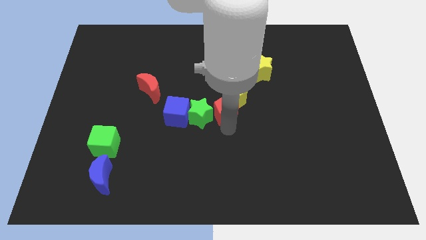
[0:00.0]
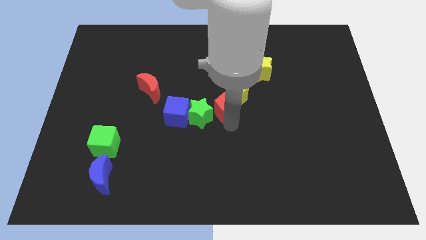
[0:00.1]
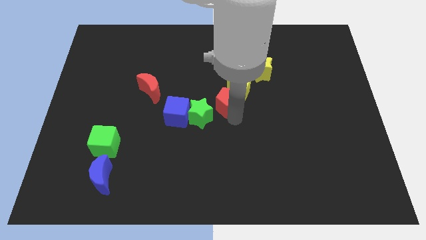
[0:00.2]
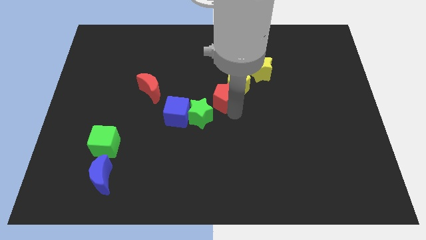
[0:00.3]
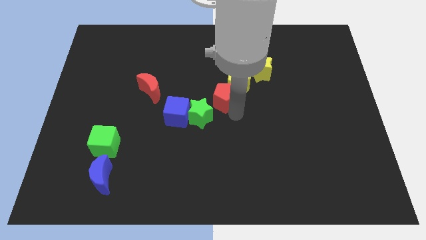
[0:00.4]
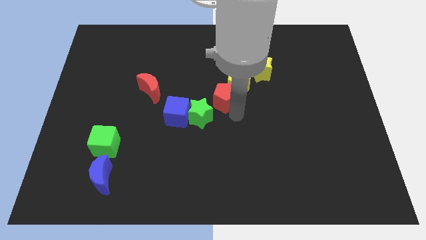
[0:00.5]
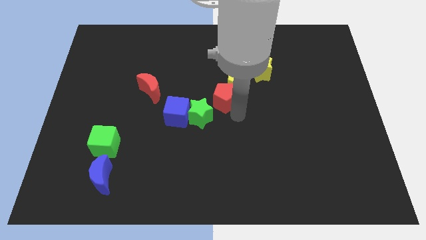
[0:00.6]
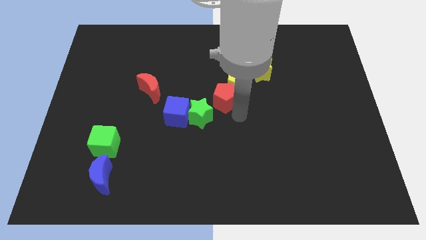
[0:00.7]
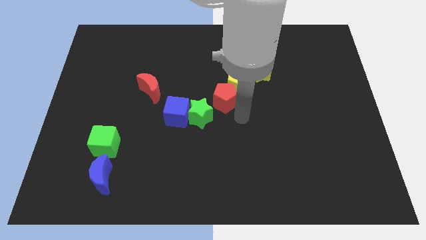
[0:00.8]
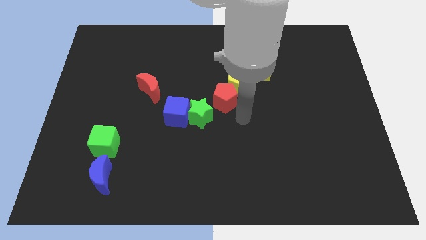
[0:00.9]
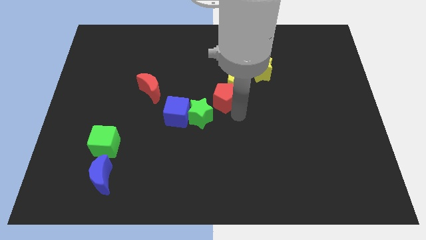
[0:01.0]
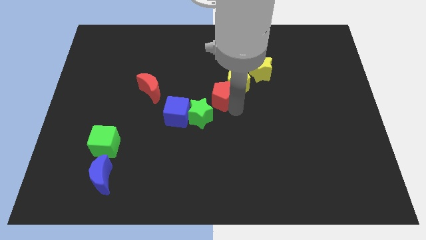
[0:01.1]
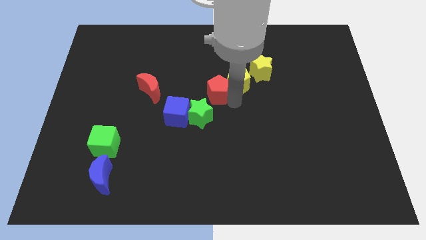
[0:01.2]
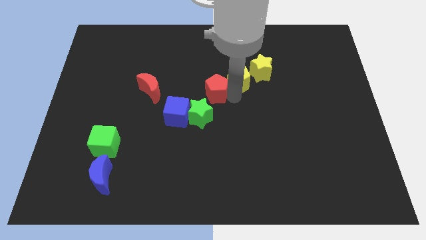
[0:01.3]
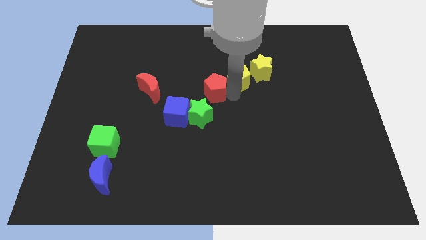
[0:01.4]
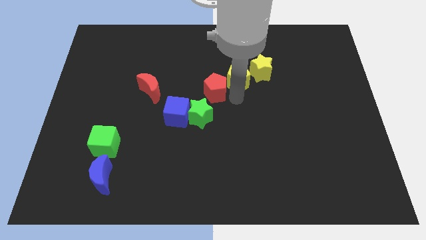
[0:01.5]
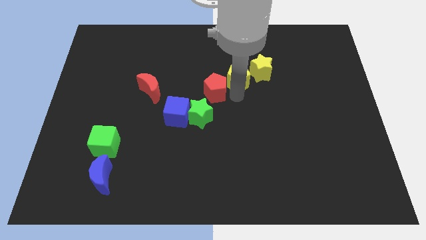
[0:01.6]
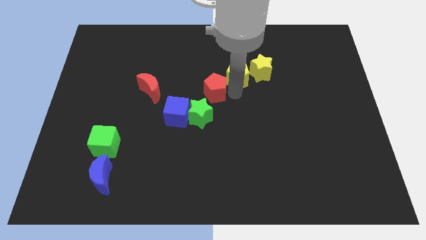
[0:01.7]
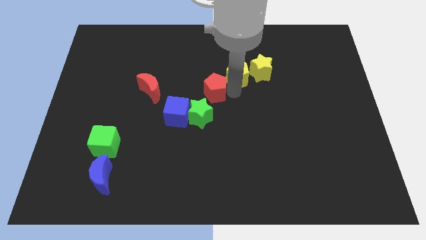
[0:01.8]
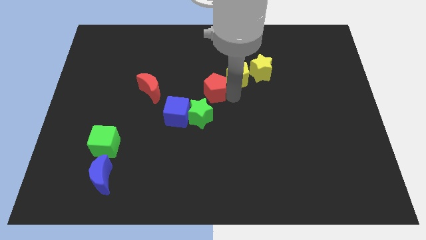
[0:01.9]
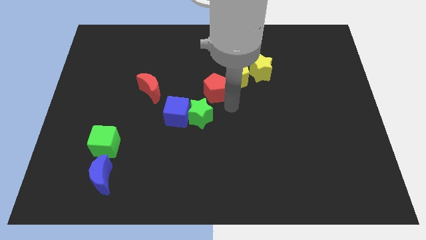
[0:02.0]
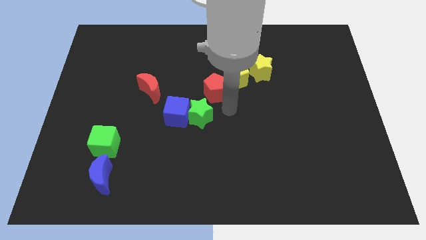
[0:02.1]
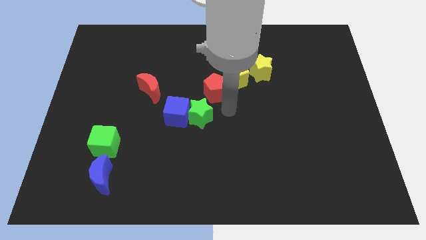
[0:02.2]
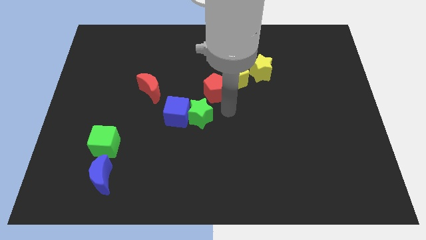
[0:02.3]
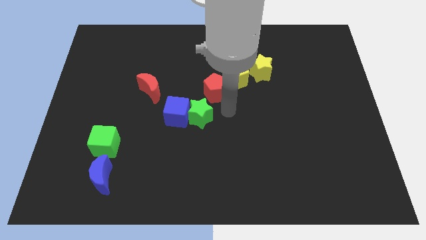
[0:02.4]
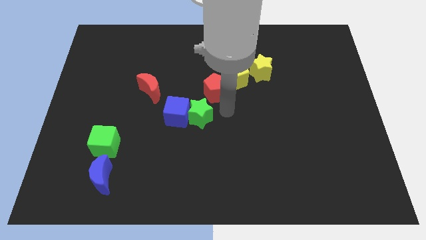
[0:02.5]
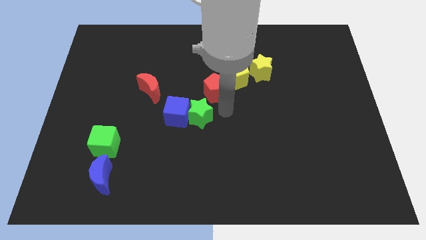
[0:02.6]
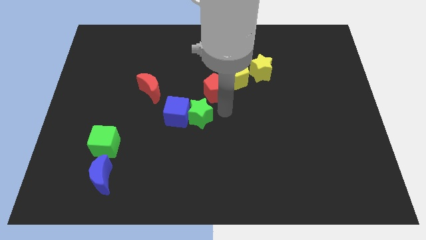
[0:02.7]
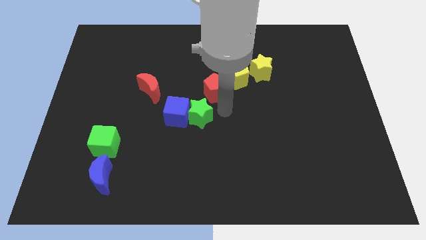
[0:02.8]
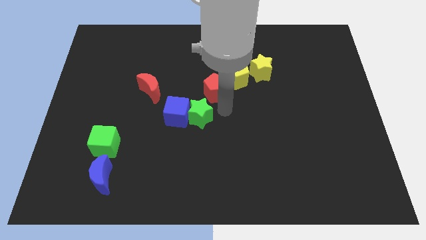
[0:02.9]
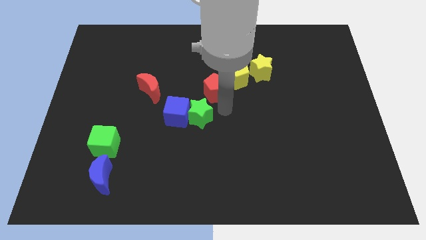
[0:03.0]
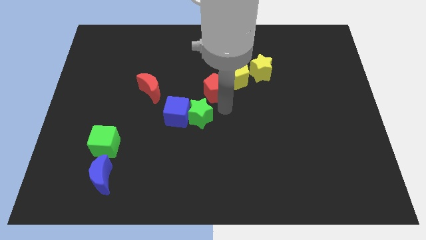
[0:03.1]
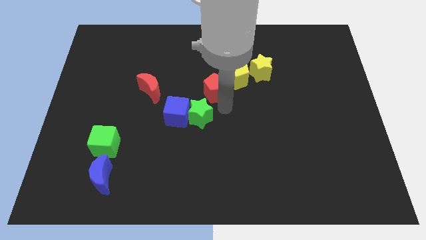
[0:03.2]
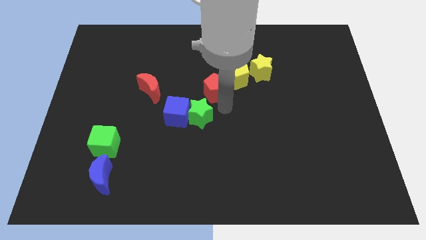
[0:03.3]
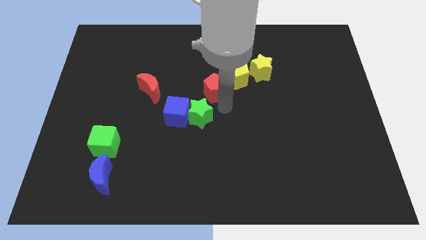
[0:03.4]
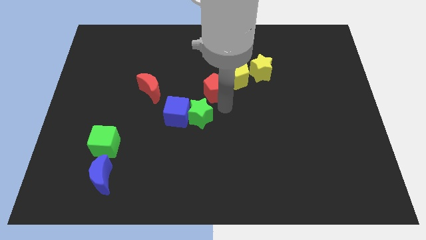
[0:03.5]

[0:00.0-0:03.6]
push the red pentagon into the yellow pentagon

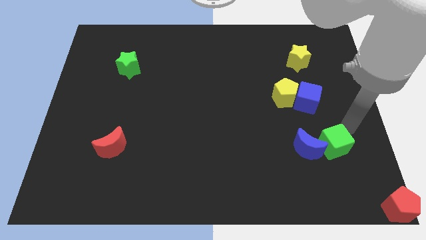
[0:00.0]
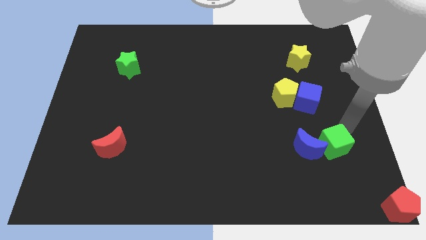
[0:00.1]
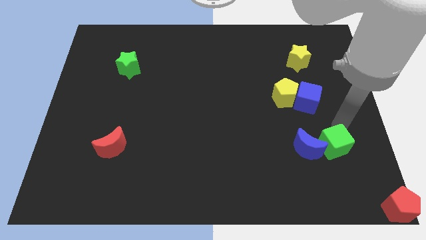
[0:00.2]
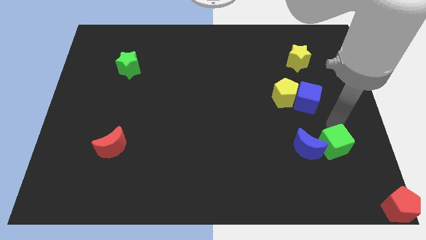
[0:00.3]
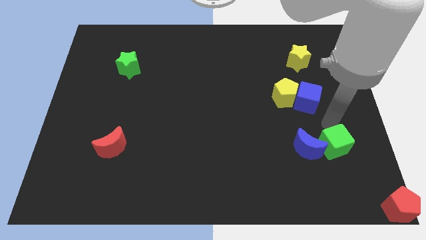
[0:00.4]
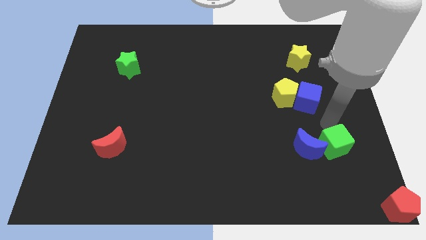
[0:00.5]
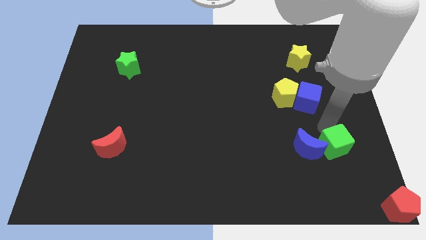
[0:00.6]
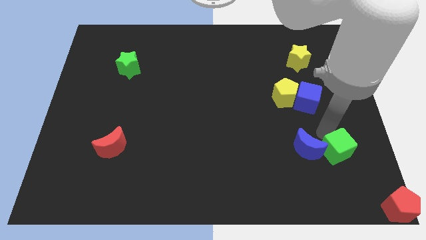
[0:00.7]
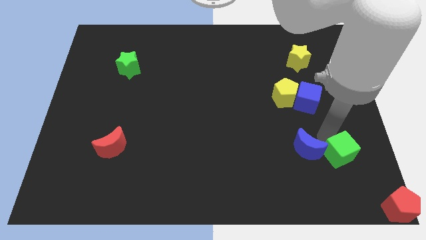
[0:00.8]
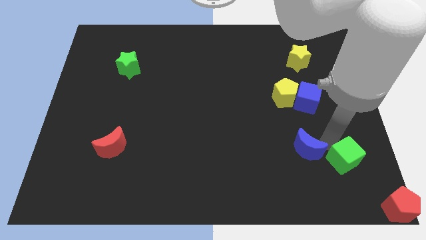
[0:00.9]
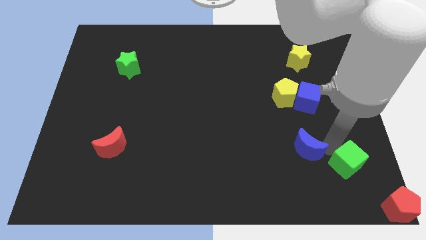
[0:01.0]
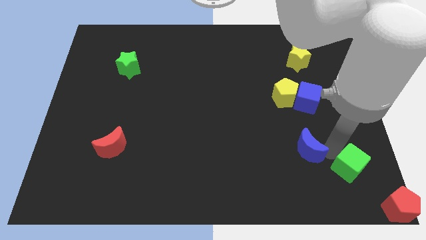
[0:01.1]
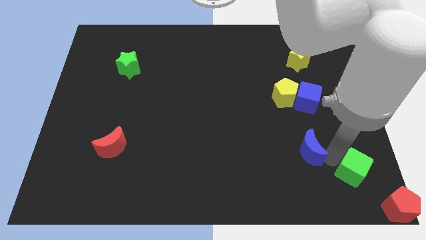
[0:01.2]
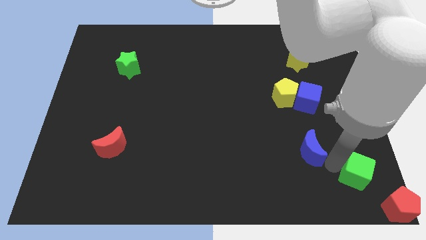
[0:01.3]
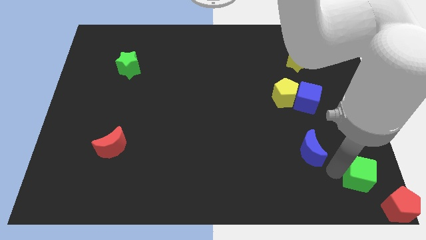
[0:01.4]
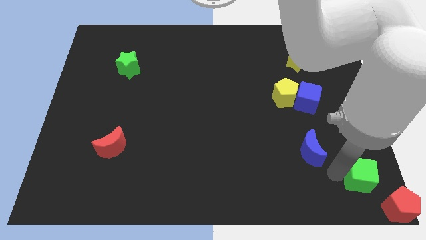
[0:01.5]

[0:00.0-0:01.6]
separate the green cube and the blue moon

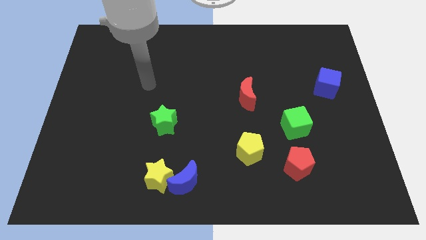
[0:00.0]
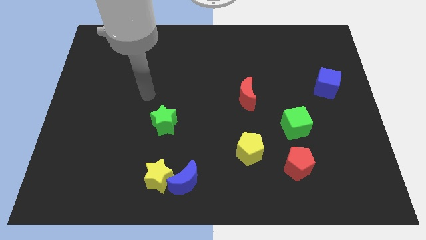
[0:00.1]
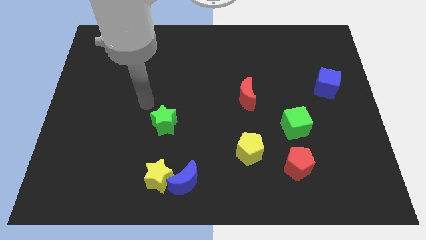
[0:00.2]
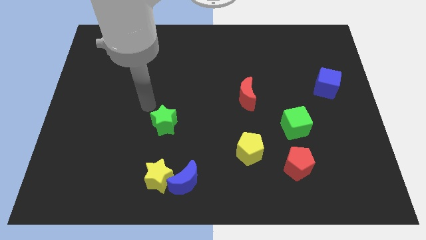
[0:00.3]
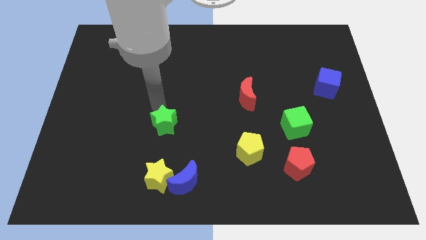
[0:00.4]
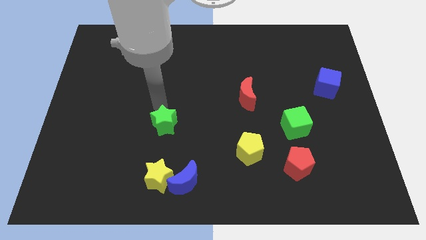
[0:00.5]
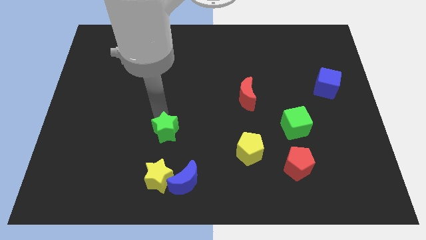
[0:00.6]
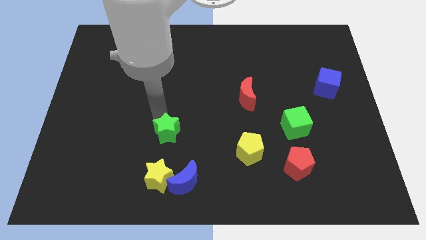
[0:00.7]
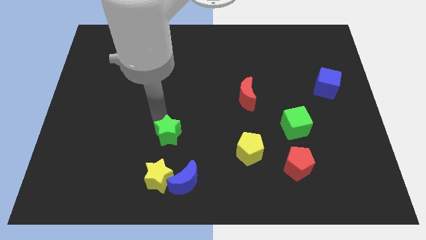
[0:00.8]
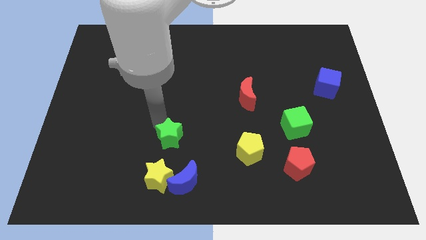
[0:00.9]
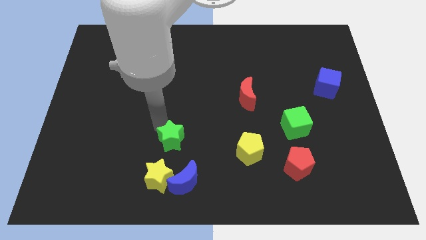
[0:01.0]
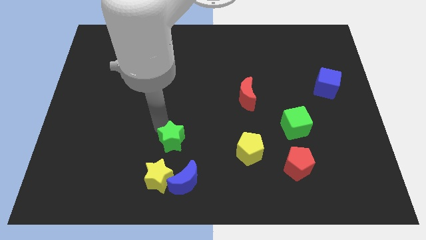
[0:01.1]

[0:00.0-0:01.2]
push the green star towards the bottom left of the board

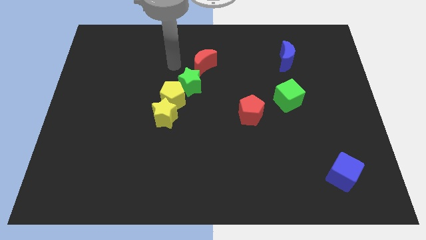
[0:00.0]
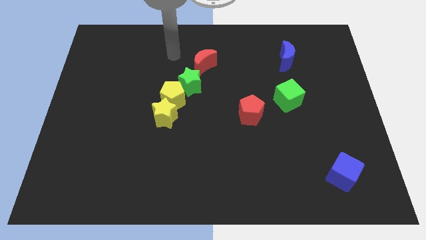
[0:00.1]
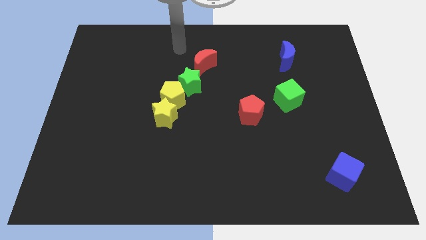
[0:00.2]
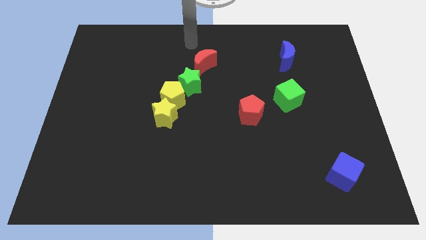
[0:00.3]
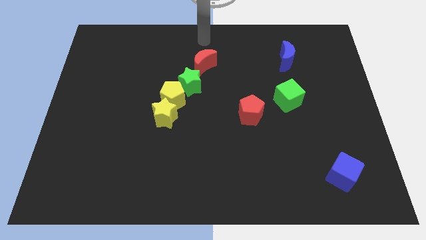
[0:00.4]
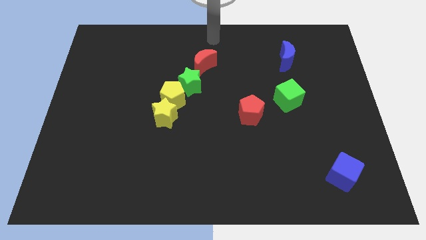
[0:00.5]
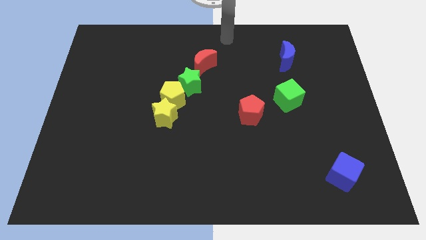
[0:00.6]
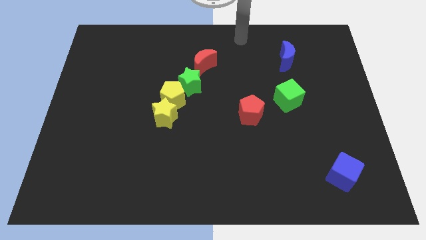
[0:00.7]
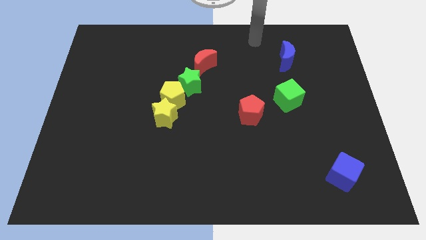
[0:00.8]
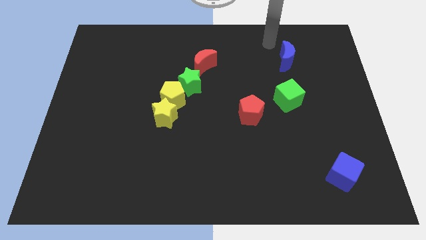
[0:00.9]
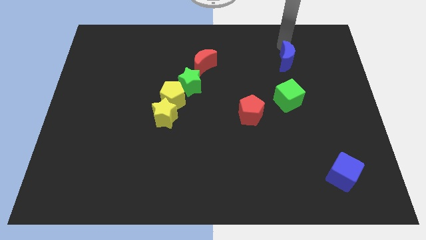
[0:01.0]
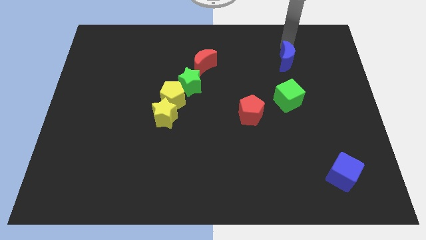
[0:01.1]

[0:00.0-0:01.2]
place arm on the top of blue crescent

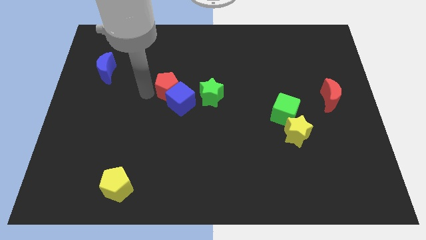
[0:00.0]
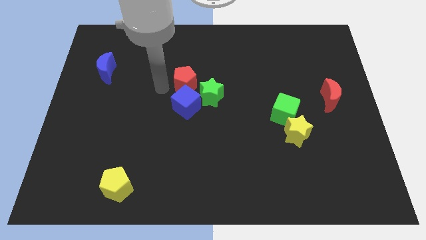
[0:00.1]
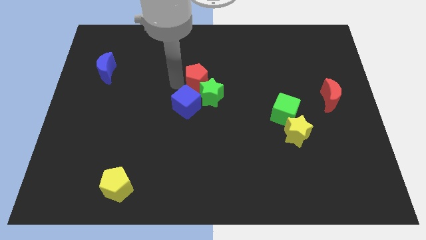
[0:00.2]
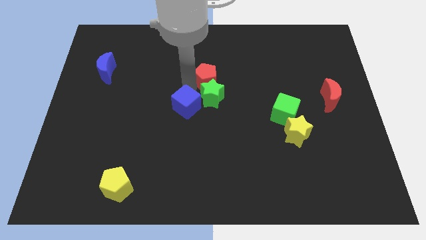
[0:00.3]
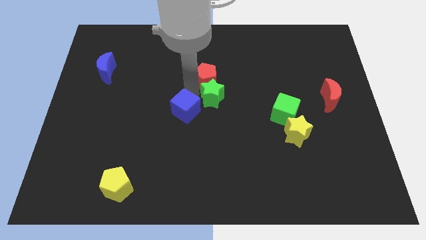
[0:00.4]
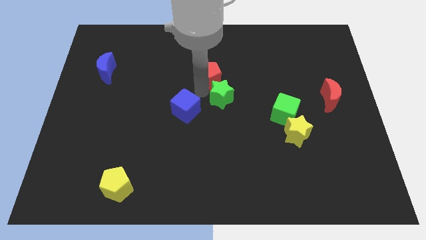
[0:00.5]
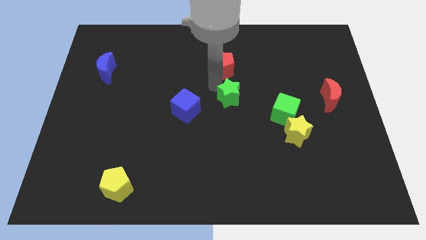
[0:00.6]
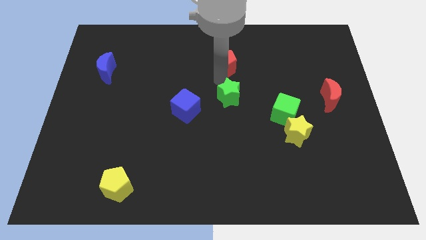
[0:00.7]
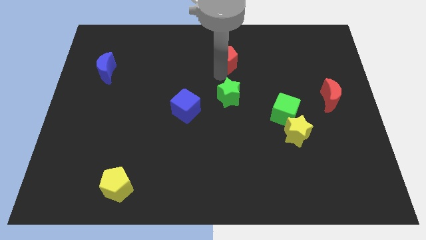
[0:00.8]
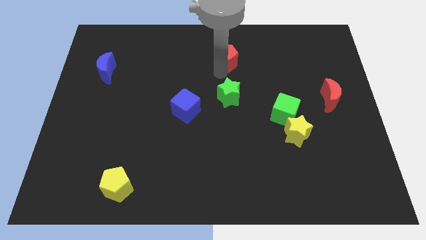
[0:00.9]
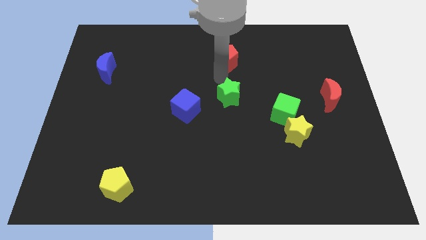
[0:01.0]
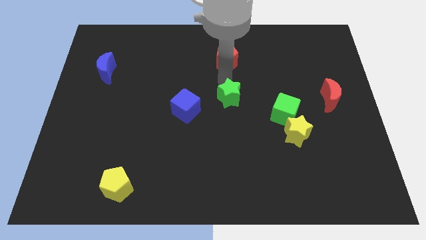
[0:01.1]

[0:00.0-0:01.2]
separate the red pentagon away from the blue cube

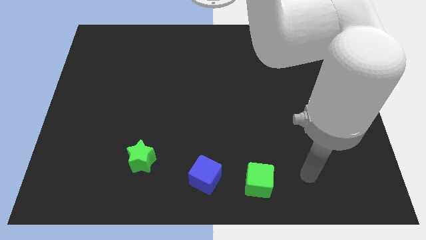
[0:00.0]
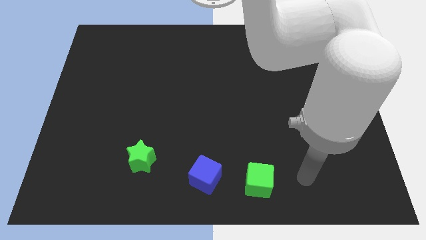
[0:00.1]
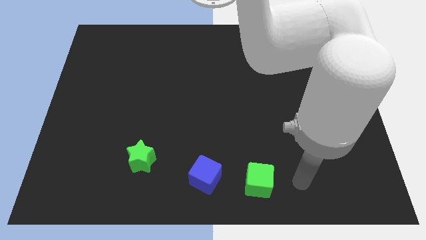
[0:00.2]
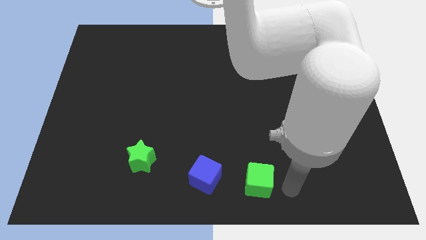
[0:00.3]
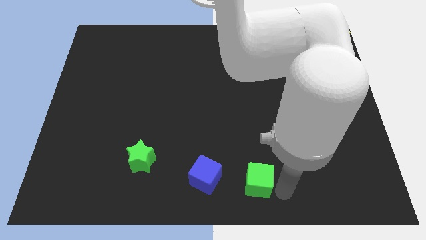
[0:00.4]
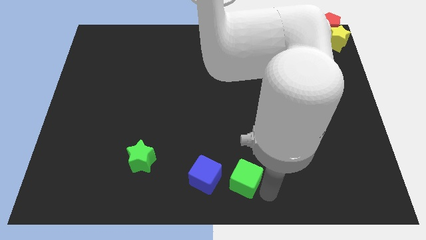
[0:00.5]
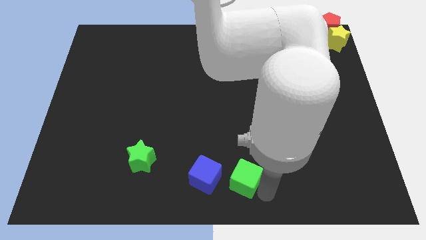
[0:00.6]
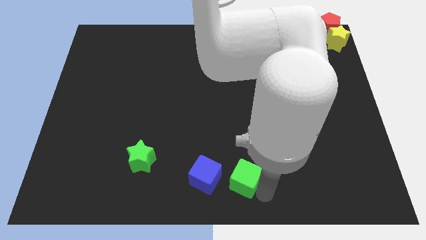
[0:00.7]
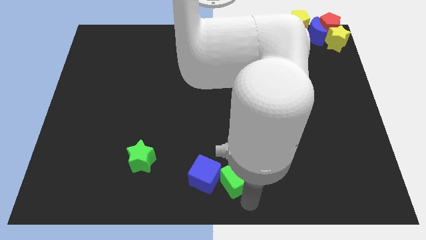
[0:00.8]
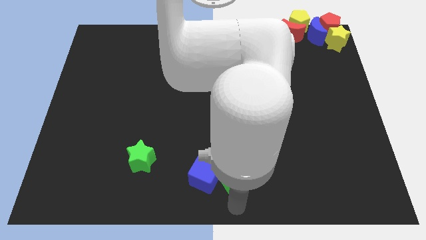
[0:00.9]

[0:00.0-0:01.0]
move green cube into blue cube
